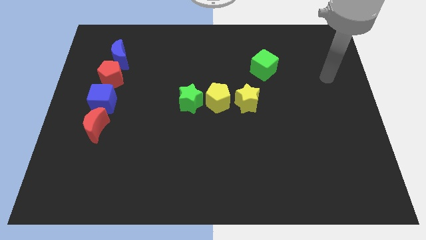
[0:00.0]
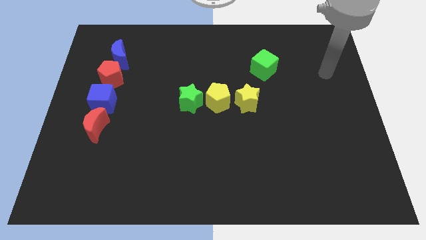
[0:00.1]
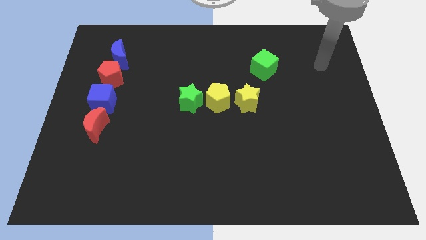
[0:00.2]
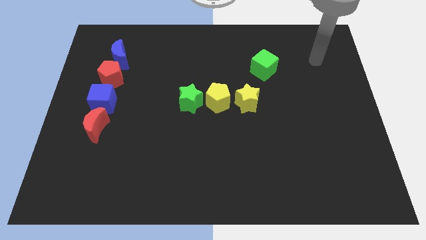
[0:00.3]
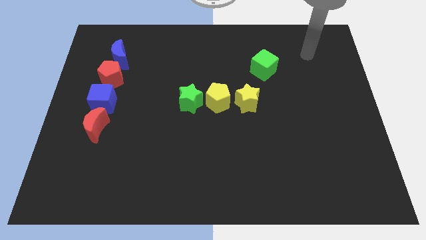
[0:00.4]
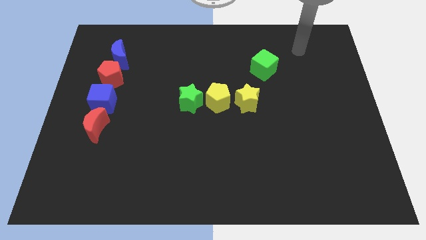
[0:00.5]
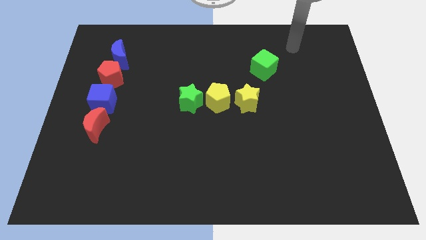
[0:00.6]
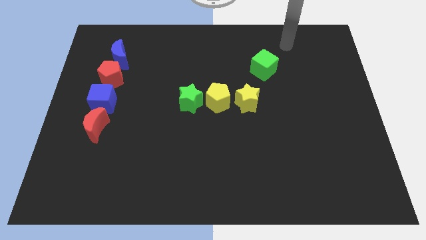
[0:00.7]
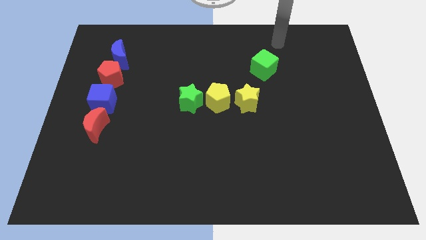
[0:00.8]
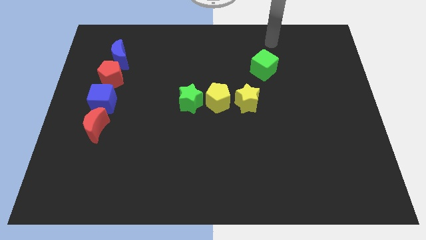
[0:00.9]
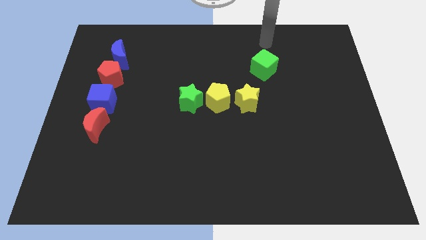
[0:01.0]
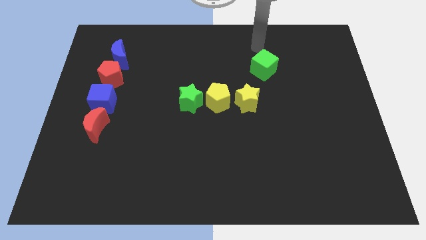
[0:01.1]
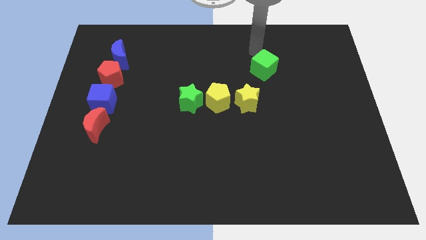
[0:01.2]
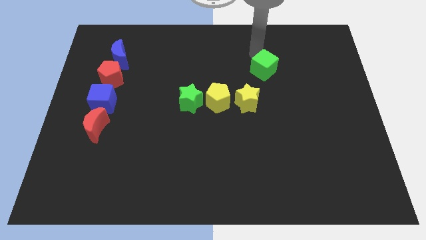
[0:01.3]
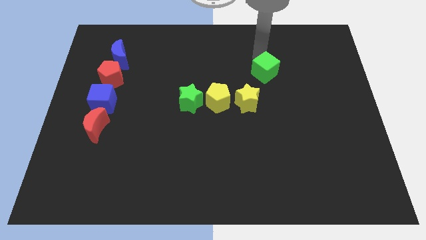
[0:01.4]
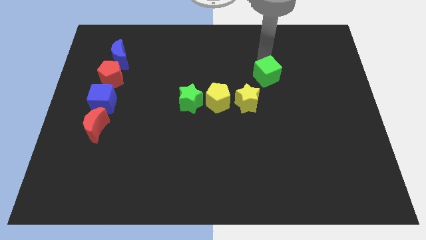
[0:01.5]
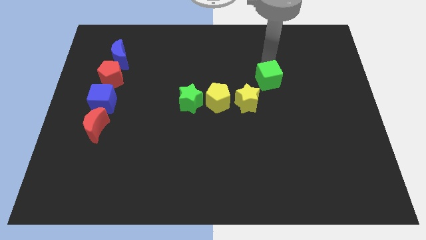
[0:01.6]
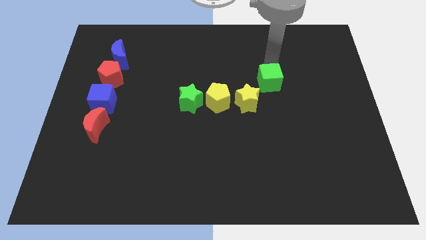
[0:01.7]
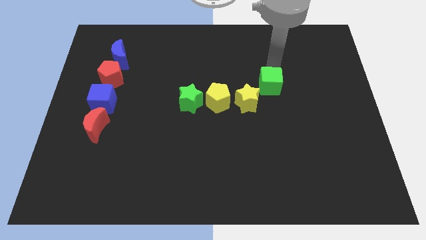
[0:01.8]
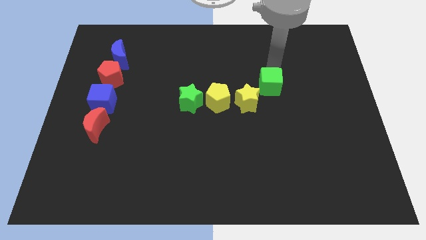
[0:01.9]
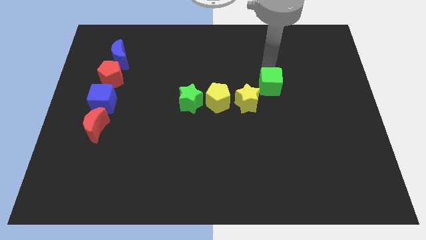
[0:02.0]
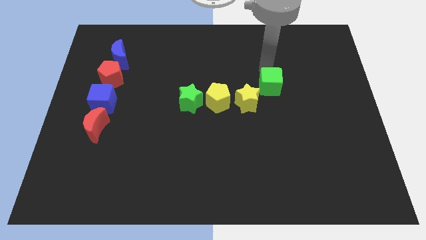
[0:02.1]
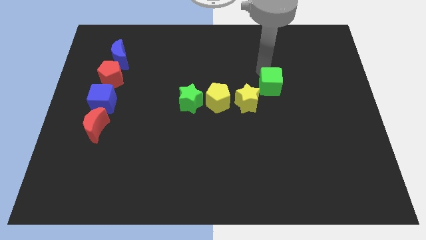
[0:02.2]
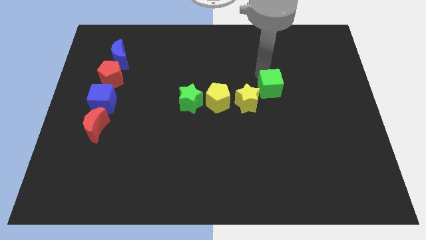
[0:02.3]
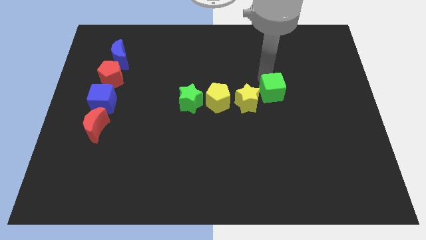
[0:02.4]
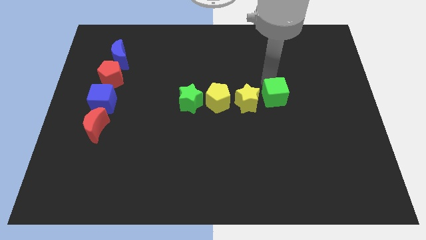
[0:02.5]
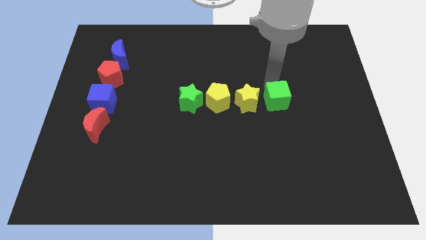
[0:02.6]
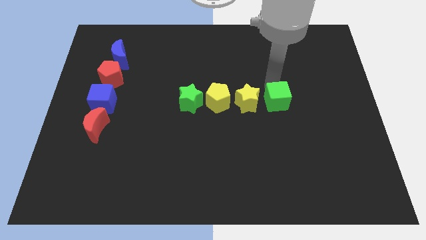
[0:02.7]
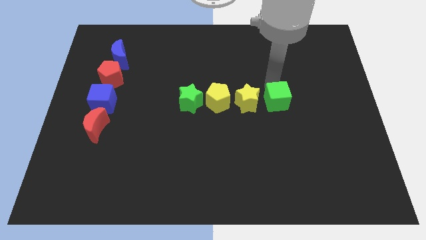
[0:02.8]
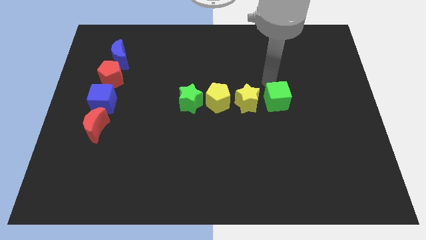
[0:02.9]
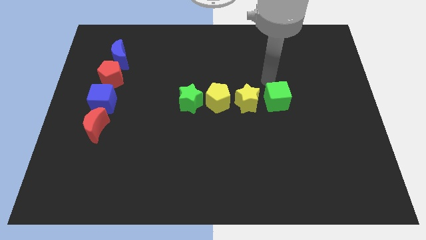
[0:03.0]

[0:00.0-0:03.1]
place green cube beside yellow star

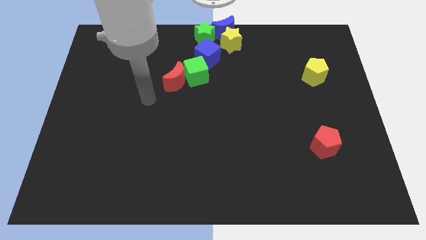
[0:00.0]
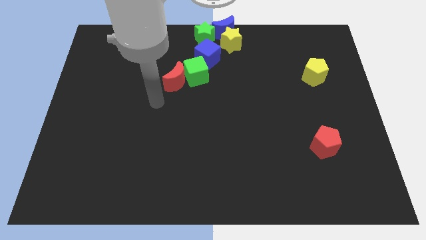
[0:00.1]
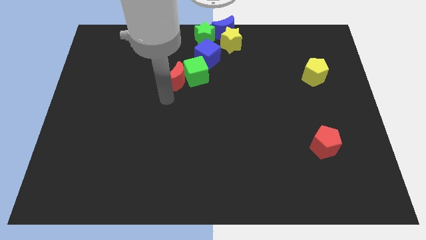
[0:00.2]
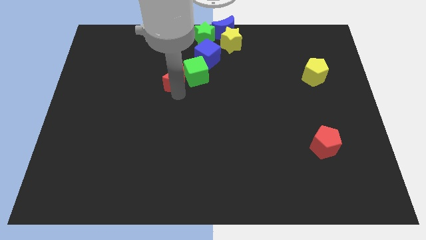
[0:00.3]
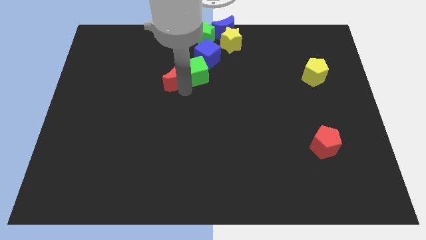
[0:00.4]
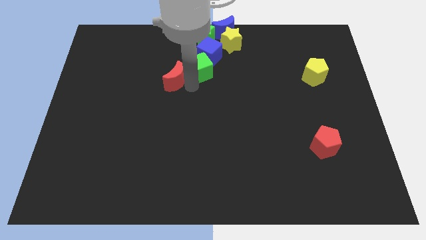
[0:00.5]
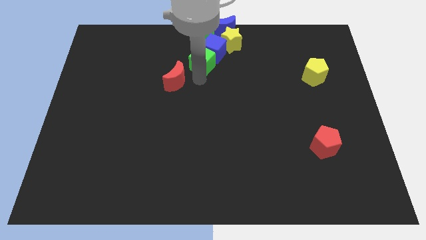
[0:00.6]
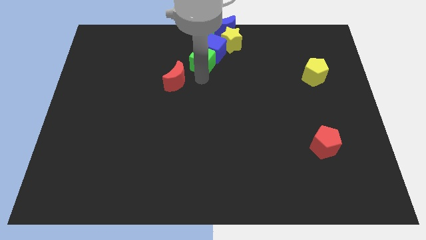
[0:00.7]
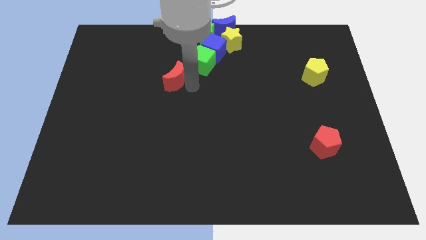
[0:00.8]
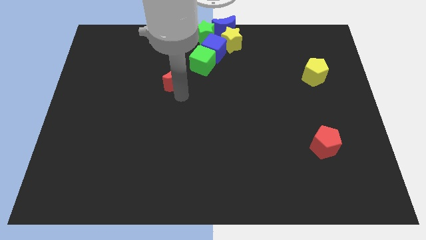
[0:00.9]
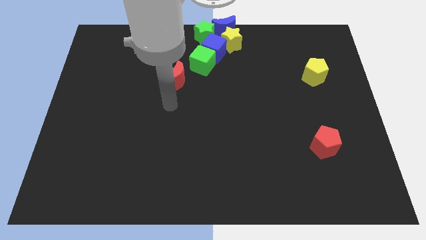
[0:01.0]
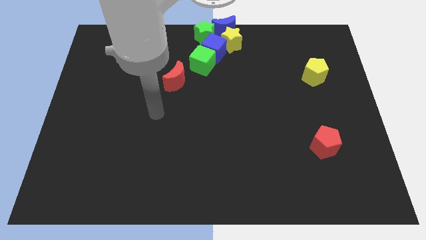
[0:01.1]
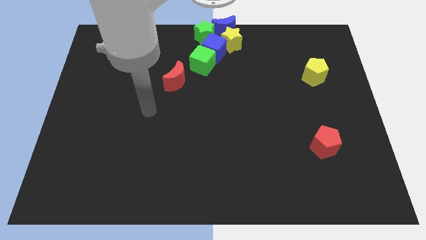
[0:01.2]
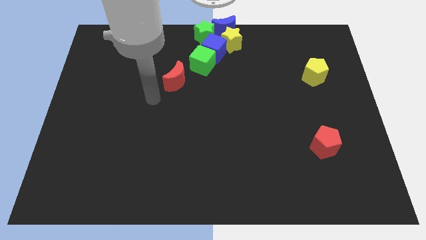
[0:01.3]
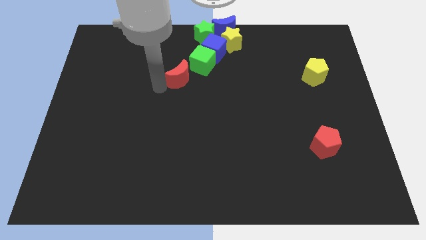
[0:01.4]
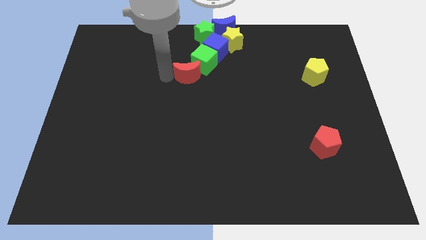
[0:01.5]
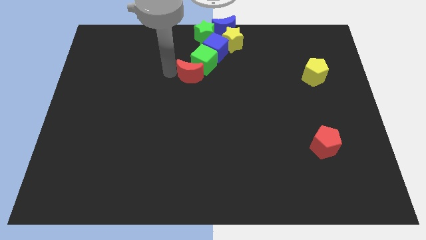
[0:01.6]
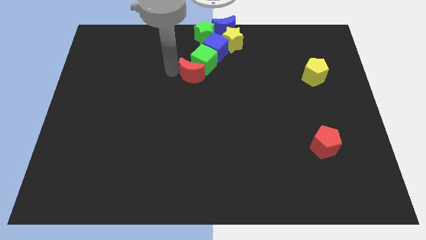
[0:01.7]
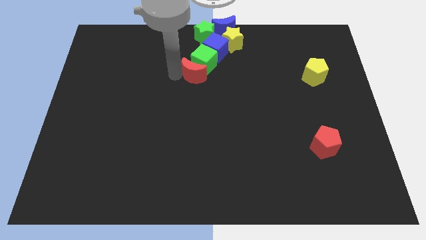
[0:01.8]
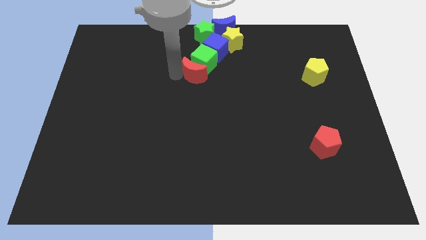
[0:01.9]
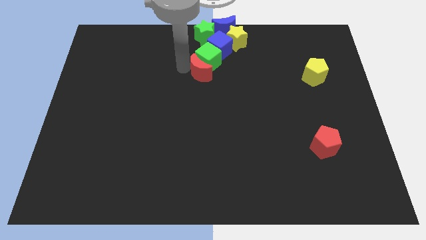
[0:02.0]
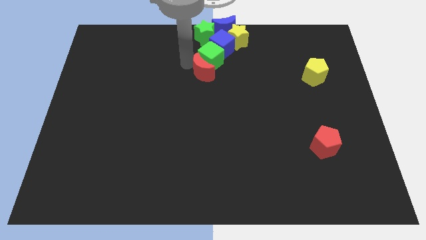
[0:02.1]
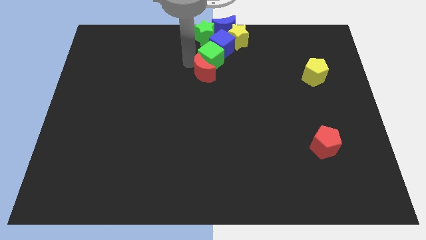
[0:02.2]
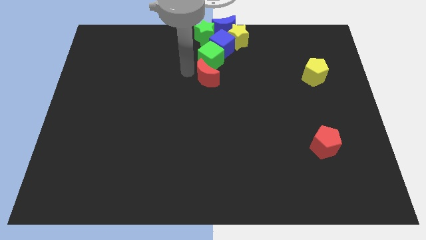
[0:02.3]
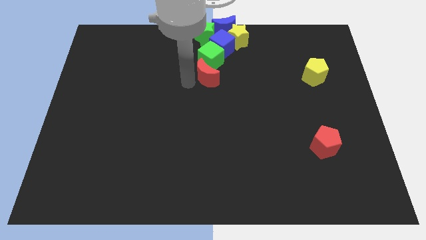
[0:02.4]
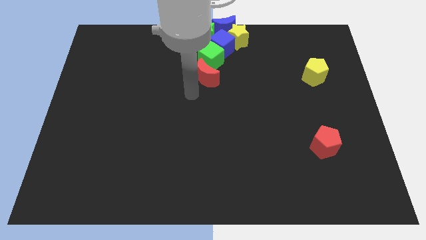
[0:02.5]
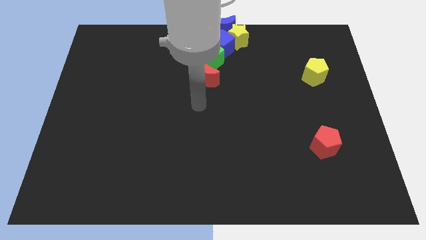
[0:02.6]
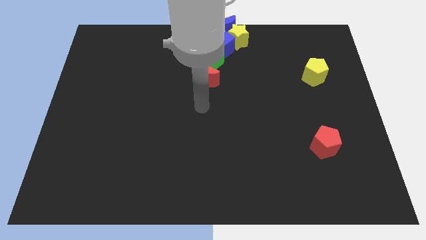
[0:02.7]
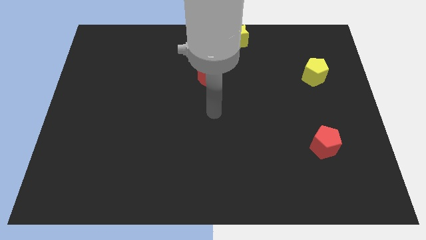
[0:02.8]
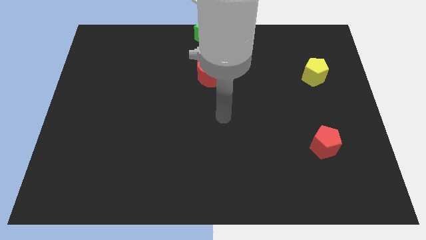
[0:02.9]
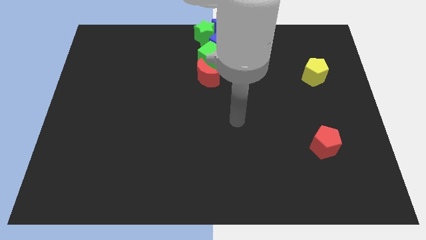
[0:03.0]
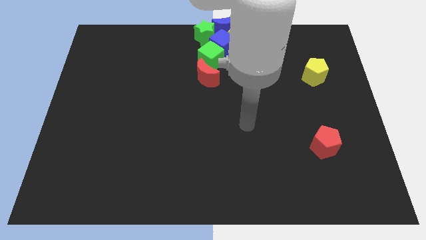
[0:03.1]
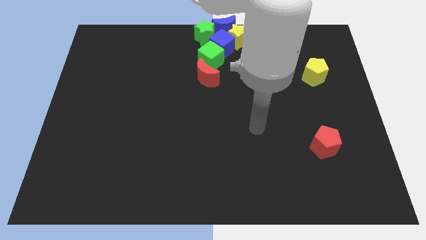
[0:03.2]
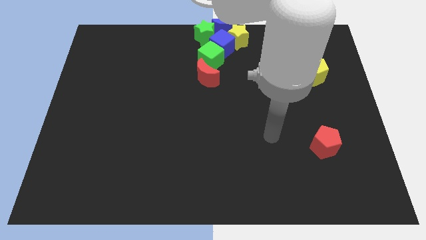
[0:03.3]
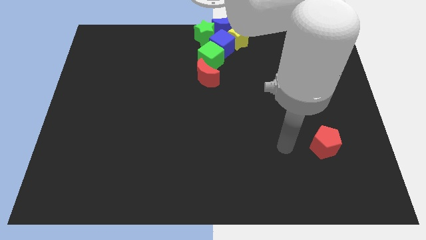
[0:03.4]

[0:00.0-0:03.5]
push the red crescent into the green cube towards the top center of board

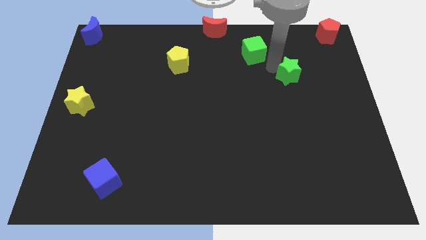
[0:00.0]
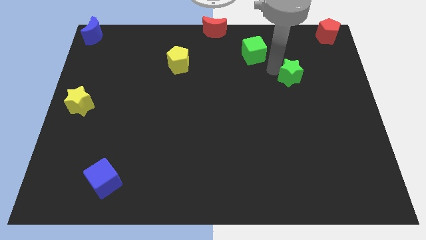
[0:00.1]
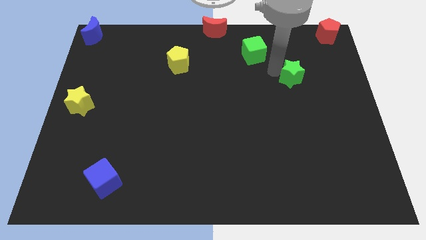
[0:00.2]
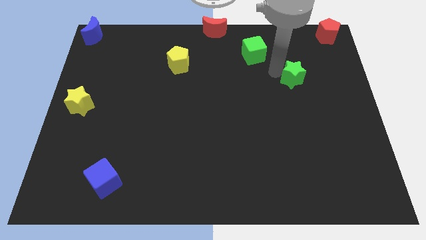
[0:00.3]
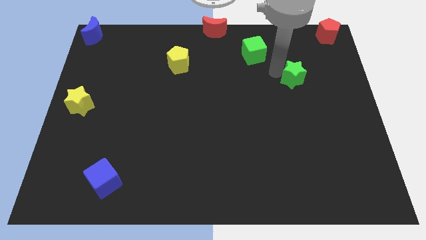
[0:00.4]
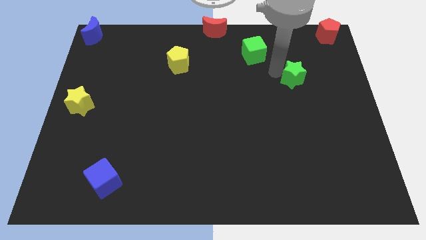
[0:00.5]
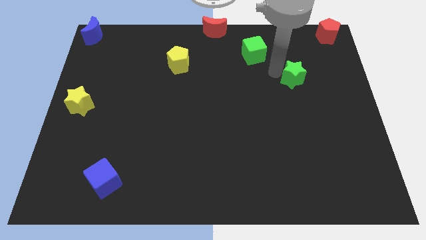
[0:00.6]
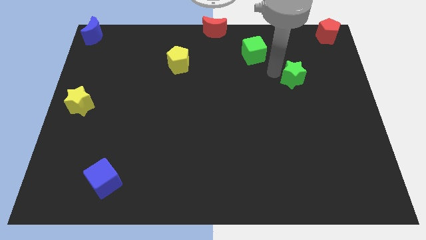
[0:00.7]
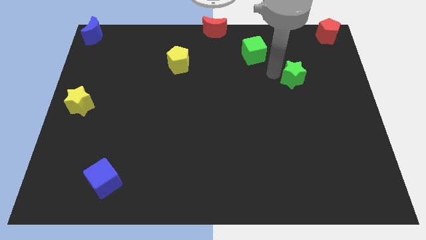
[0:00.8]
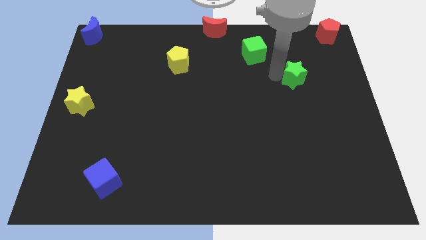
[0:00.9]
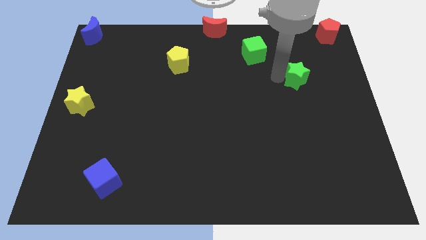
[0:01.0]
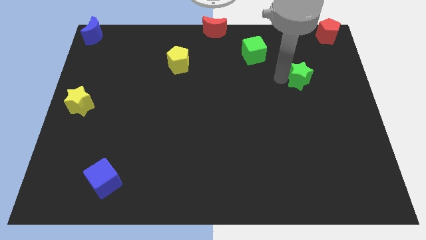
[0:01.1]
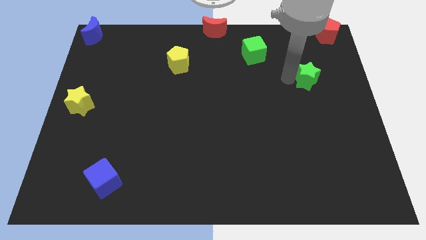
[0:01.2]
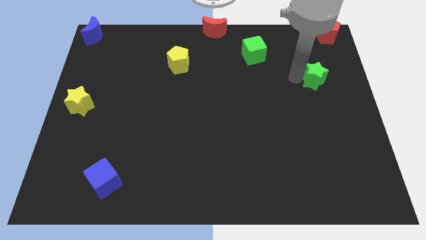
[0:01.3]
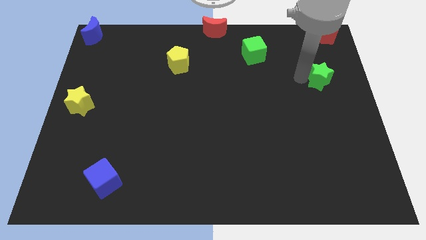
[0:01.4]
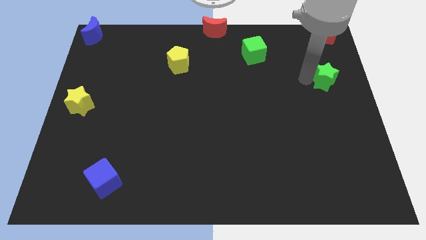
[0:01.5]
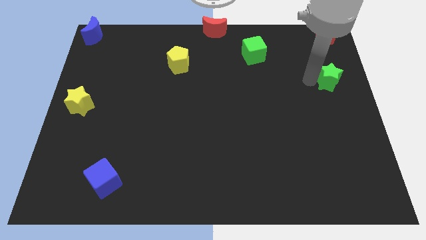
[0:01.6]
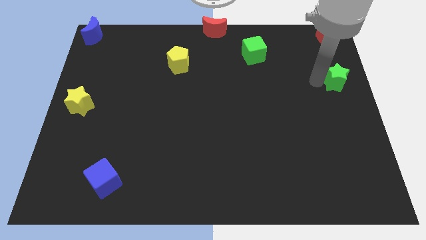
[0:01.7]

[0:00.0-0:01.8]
place the green star vertically to the bottom side of the red pentagon

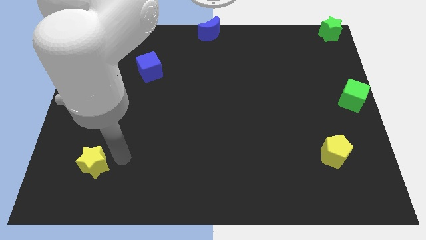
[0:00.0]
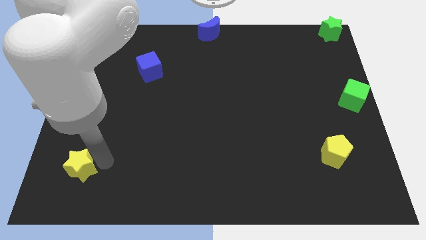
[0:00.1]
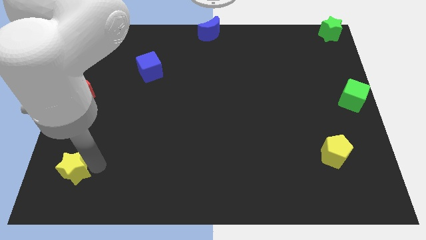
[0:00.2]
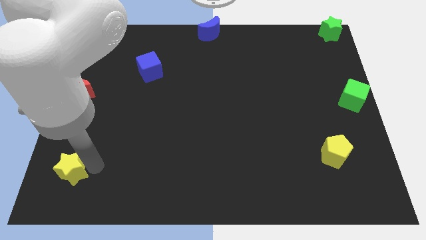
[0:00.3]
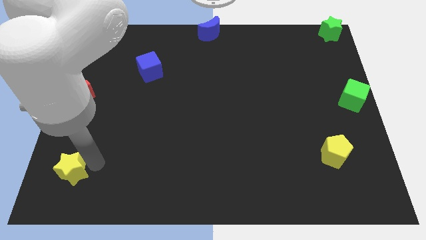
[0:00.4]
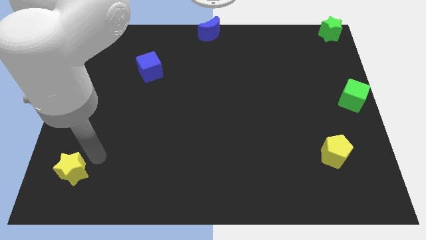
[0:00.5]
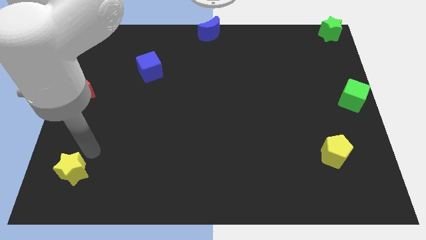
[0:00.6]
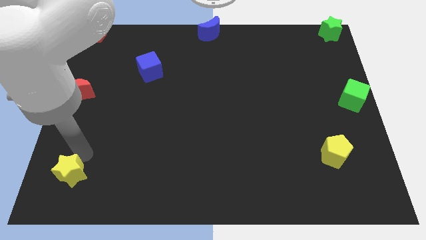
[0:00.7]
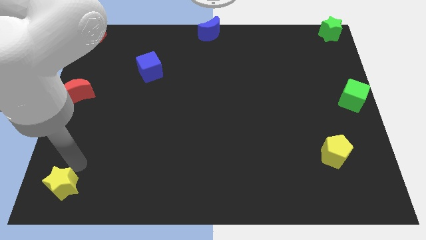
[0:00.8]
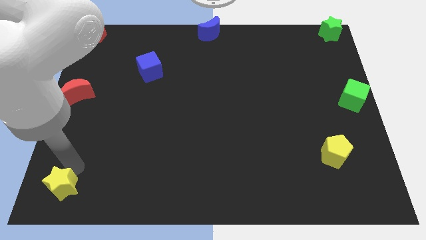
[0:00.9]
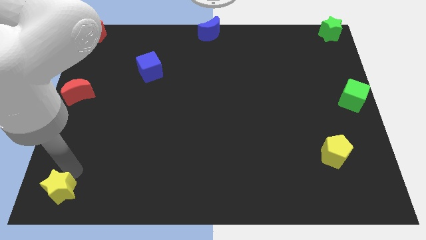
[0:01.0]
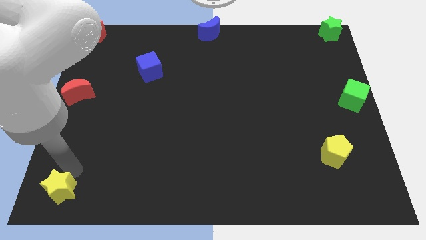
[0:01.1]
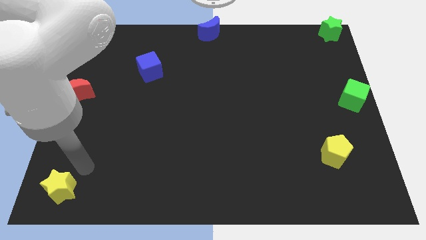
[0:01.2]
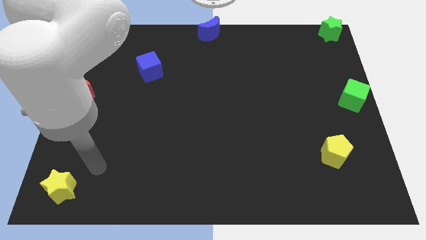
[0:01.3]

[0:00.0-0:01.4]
move the yellow star to the left bottom corner of the board
